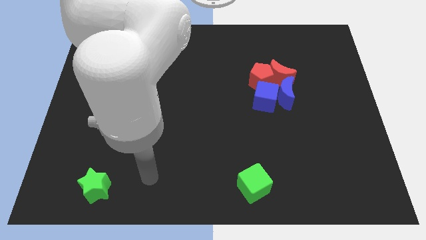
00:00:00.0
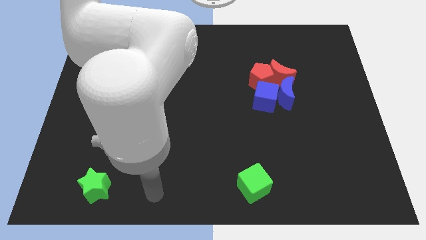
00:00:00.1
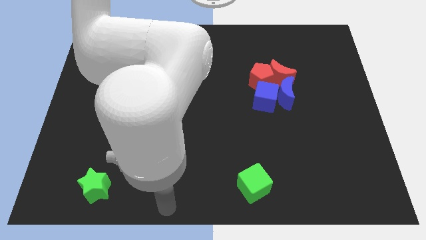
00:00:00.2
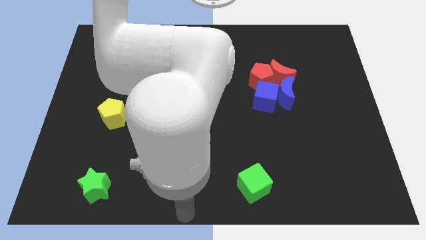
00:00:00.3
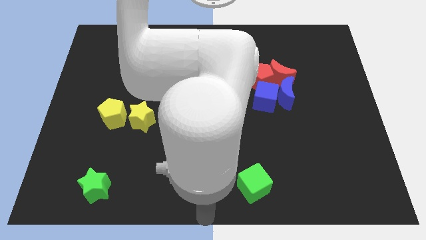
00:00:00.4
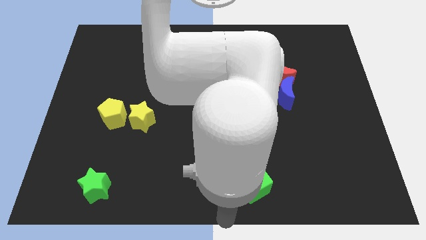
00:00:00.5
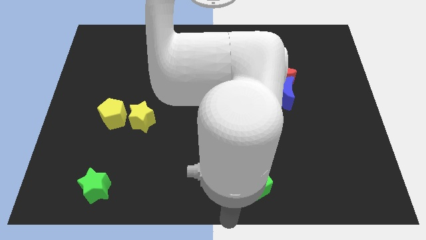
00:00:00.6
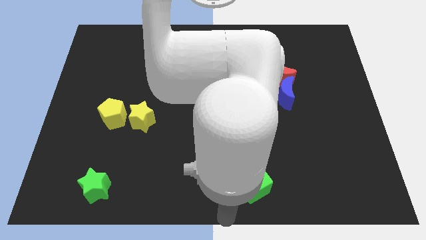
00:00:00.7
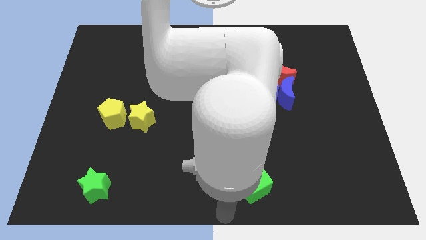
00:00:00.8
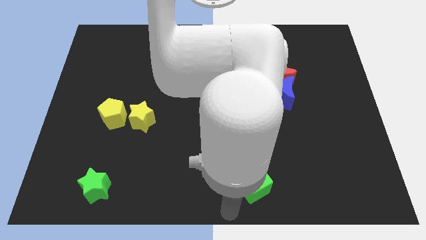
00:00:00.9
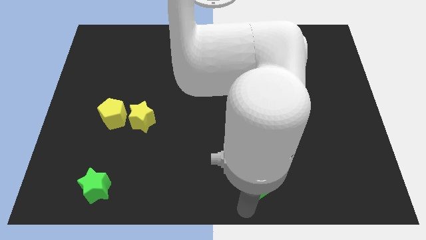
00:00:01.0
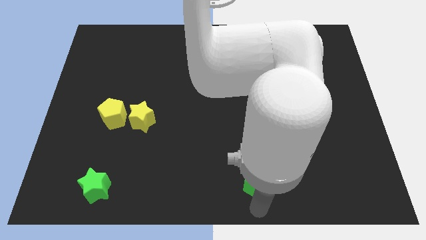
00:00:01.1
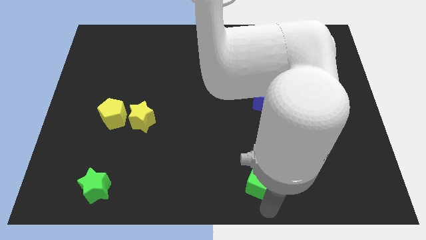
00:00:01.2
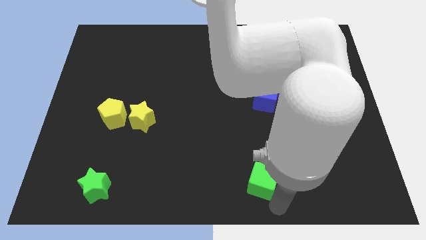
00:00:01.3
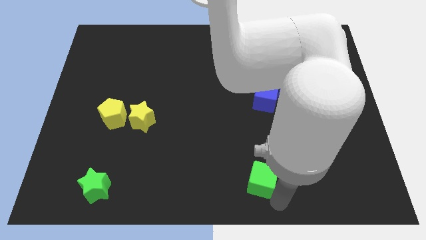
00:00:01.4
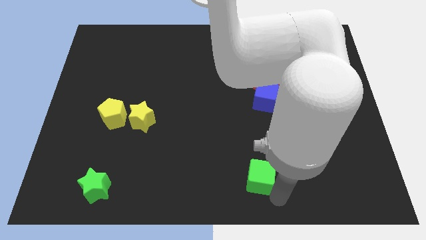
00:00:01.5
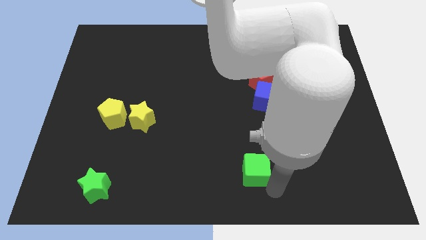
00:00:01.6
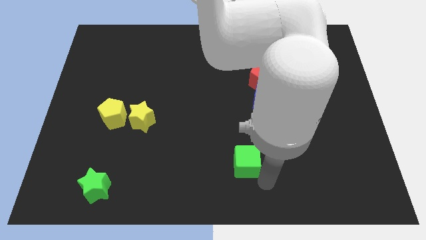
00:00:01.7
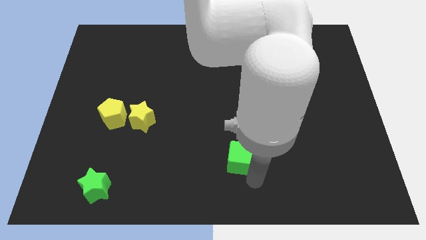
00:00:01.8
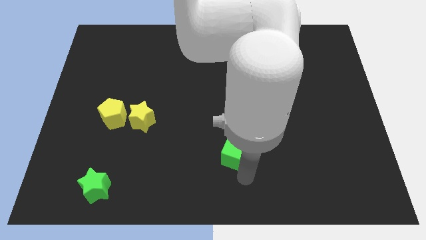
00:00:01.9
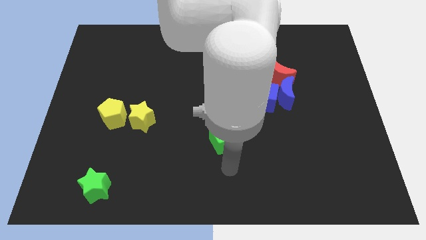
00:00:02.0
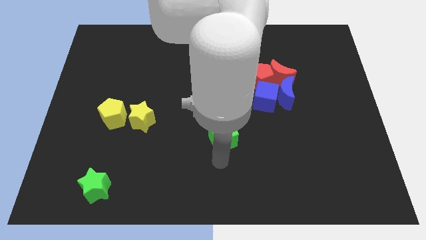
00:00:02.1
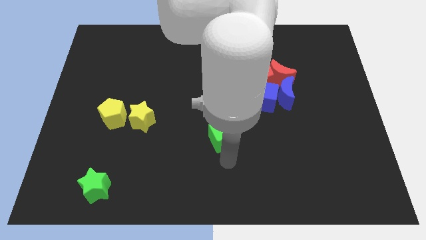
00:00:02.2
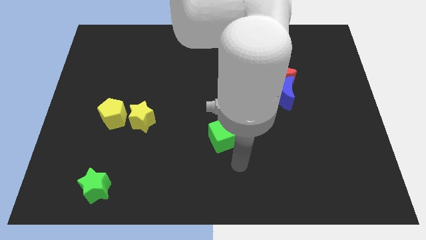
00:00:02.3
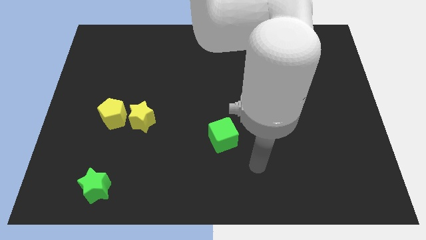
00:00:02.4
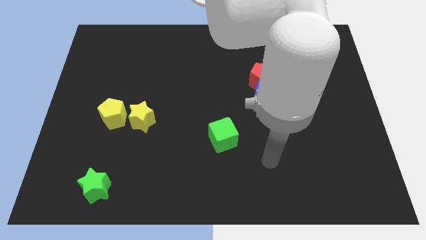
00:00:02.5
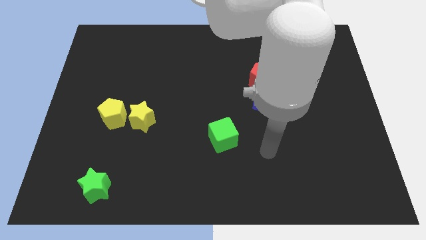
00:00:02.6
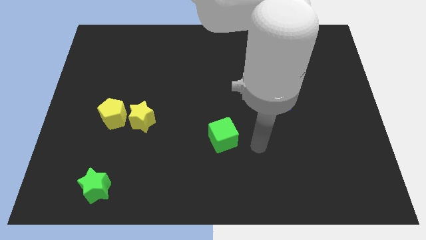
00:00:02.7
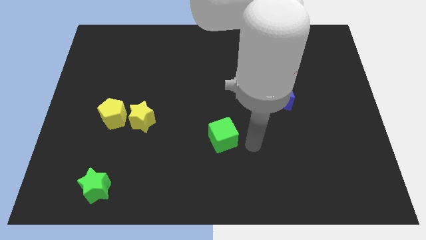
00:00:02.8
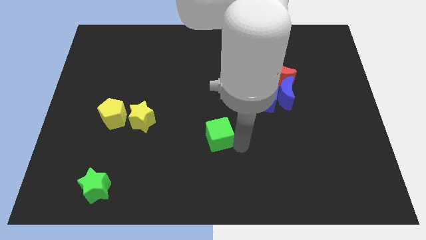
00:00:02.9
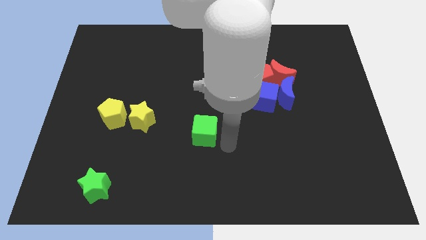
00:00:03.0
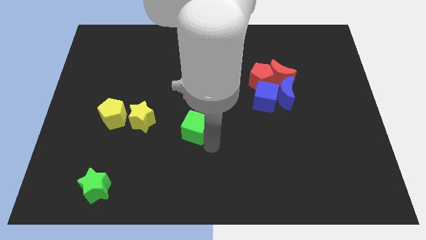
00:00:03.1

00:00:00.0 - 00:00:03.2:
place the green cube right to the yellow star

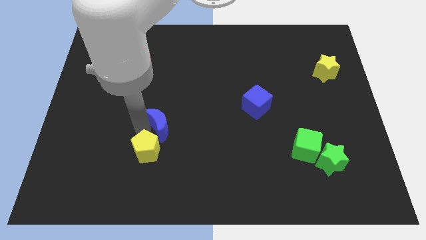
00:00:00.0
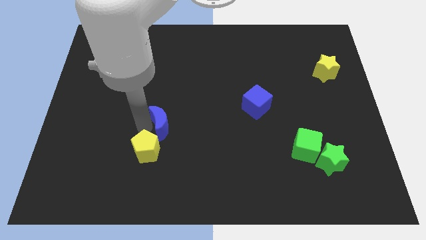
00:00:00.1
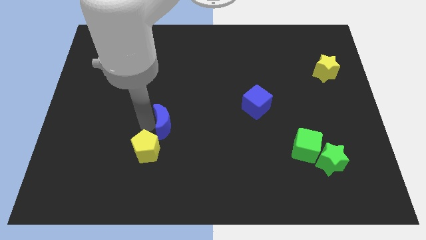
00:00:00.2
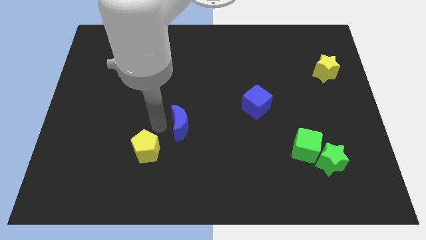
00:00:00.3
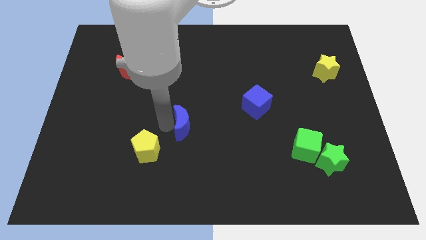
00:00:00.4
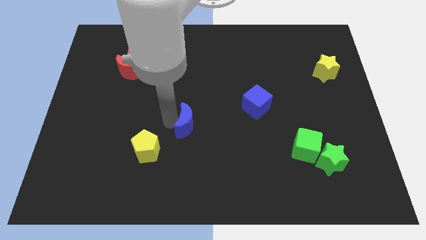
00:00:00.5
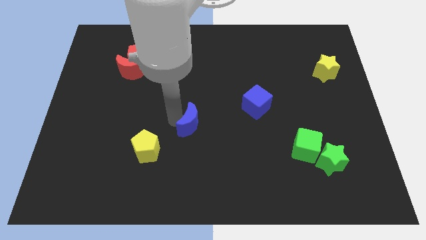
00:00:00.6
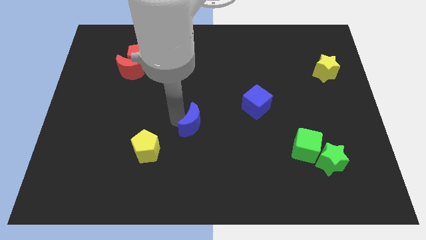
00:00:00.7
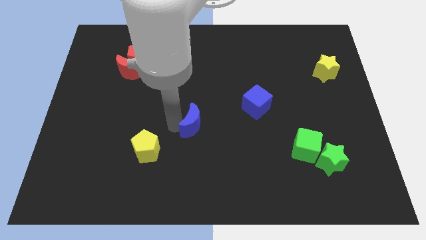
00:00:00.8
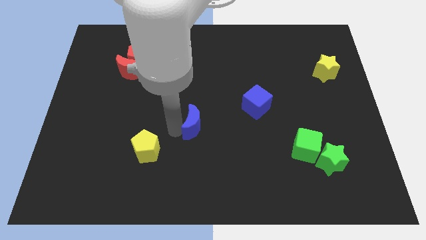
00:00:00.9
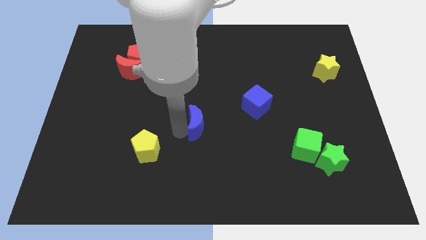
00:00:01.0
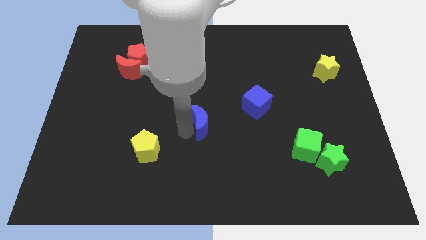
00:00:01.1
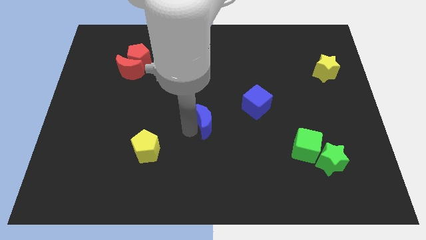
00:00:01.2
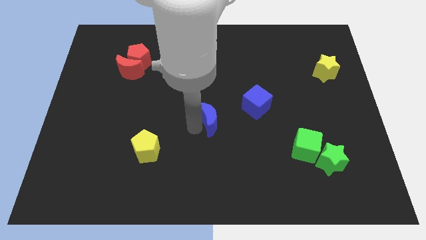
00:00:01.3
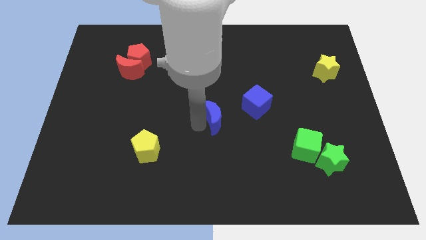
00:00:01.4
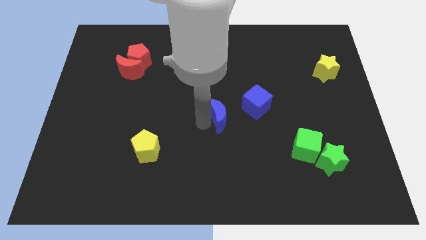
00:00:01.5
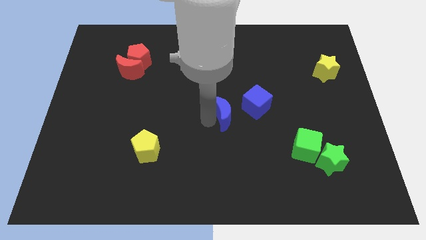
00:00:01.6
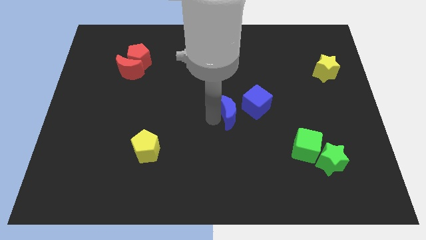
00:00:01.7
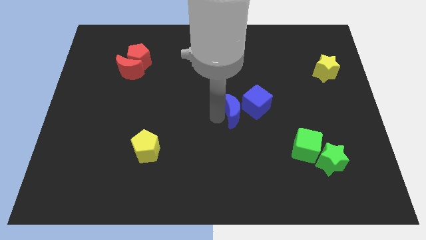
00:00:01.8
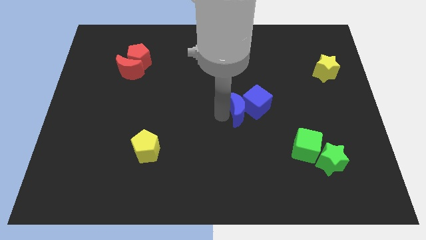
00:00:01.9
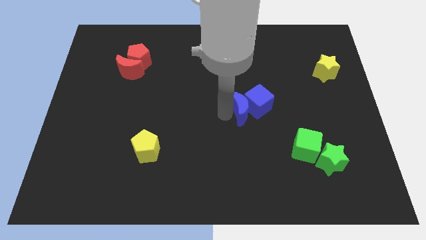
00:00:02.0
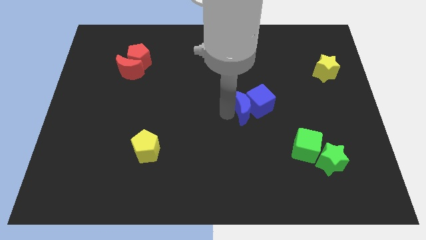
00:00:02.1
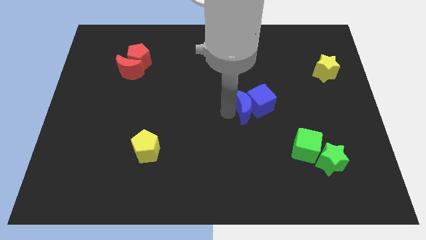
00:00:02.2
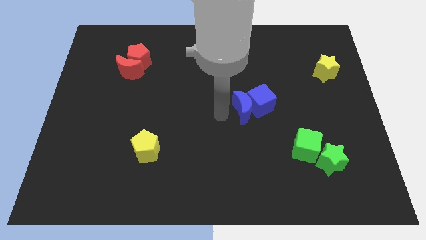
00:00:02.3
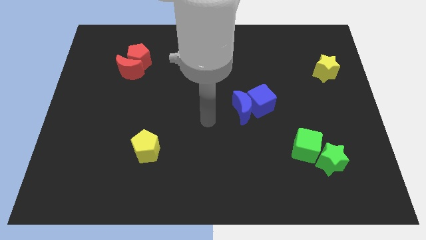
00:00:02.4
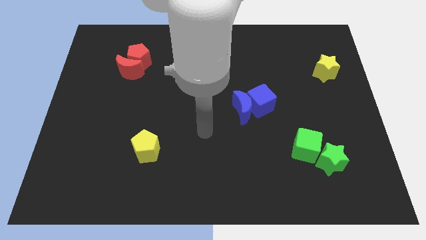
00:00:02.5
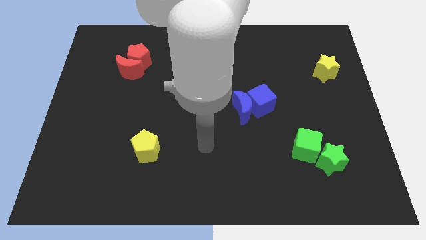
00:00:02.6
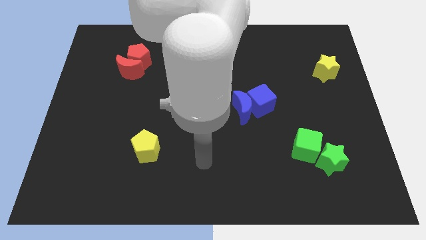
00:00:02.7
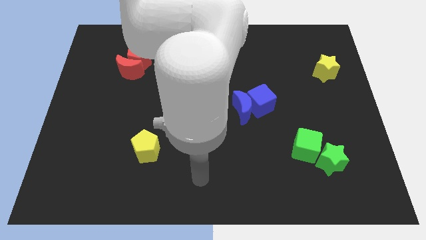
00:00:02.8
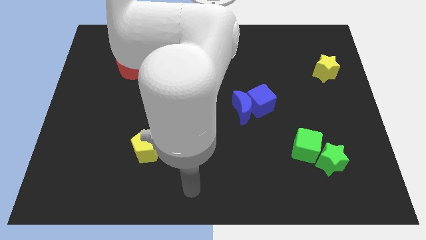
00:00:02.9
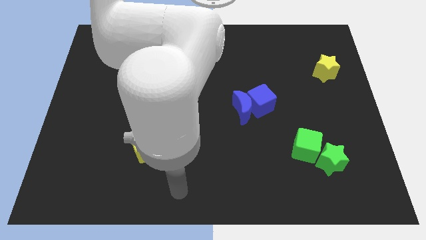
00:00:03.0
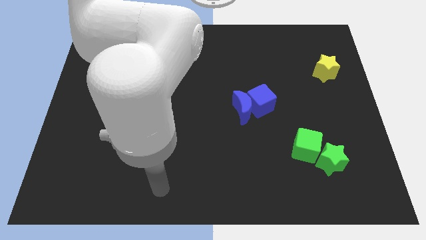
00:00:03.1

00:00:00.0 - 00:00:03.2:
slide blue moon into the blue cube

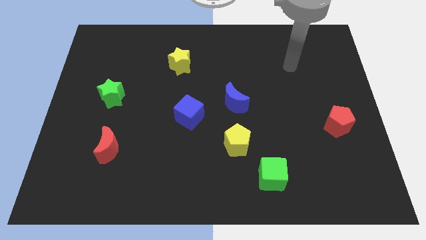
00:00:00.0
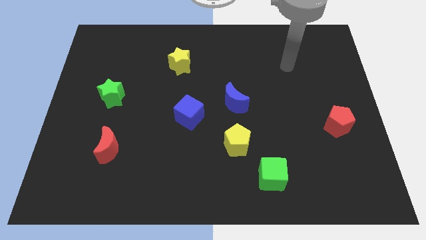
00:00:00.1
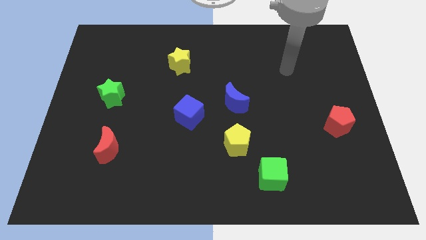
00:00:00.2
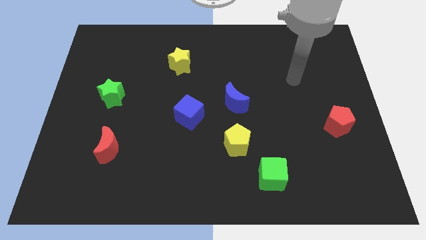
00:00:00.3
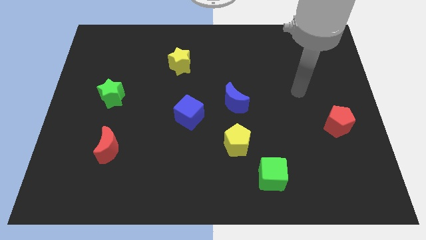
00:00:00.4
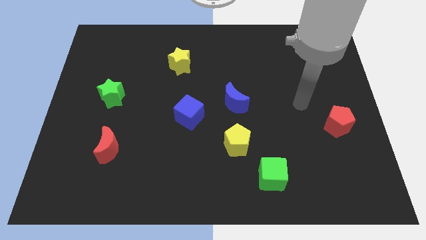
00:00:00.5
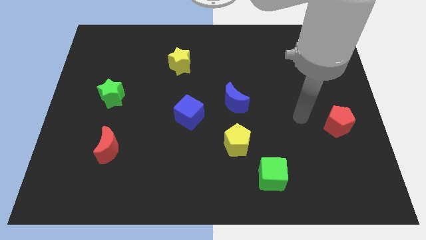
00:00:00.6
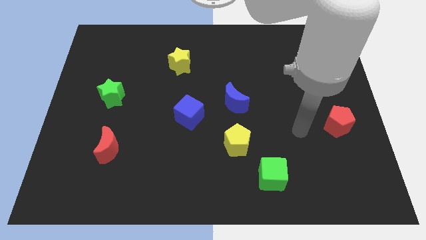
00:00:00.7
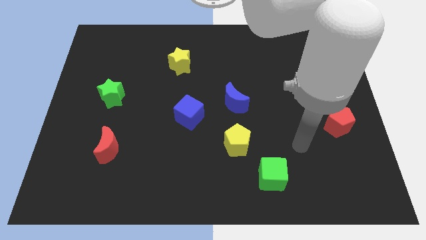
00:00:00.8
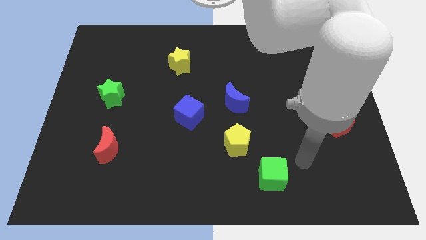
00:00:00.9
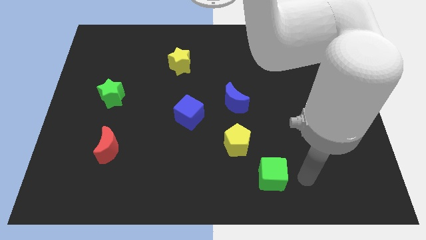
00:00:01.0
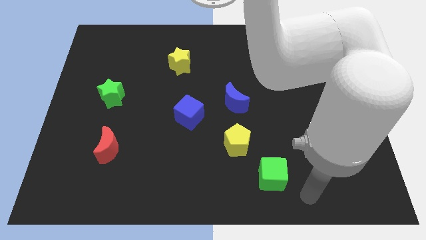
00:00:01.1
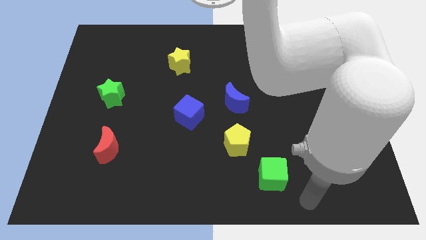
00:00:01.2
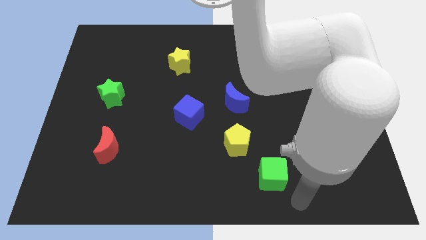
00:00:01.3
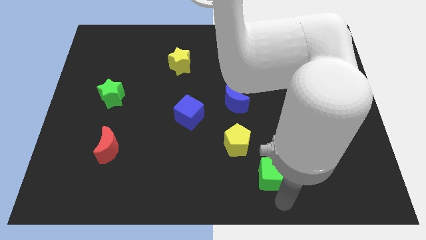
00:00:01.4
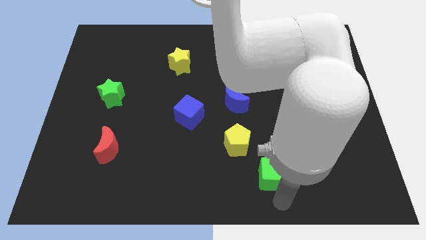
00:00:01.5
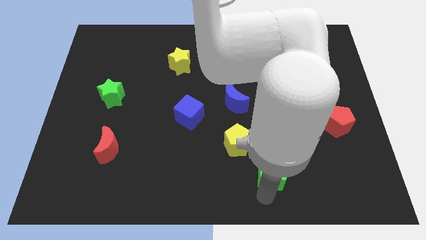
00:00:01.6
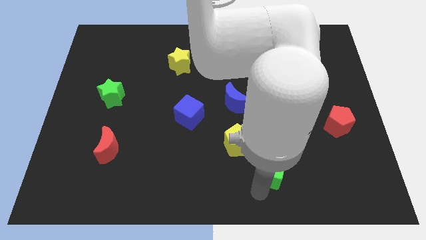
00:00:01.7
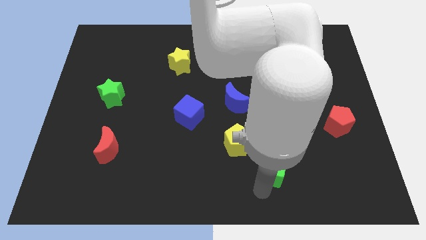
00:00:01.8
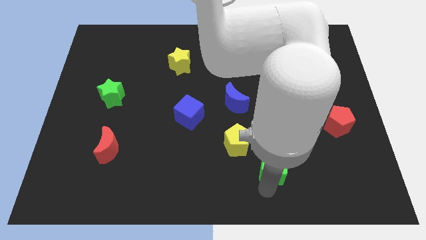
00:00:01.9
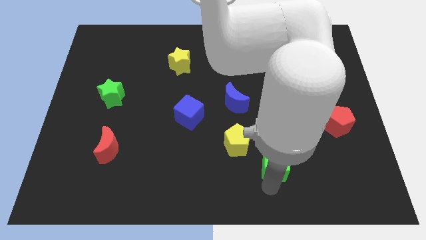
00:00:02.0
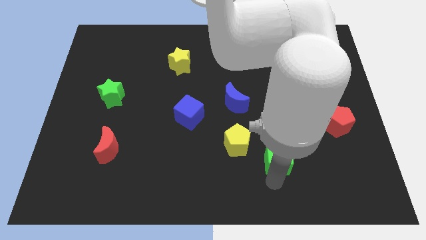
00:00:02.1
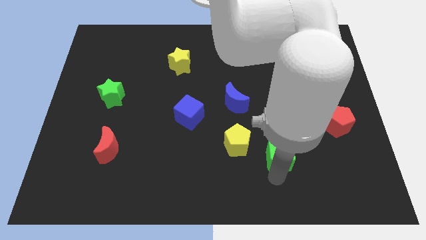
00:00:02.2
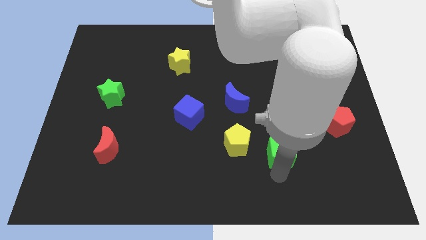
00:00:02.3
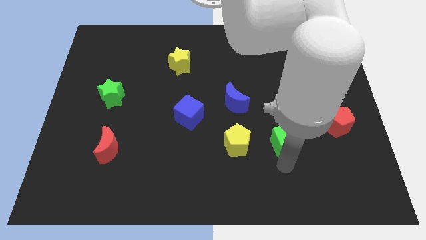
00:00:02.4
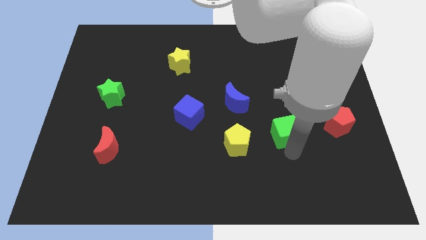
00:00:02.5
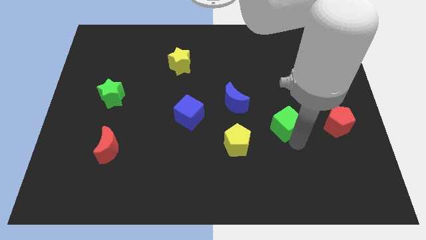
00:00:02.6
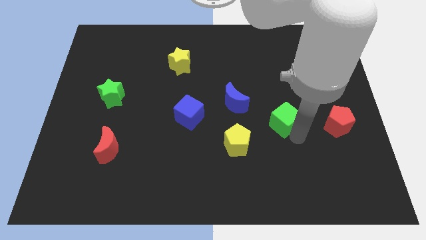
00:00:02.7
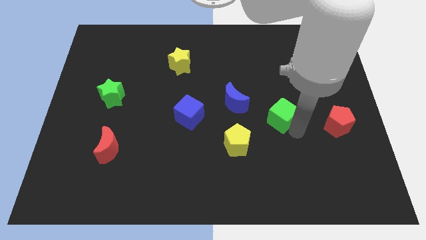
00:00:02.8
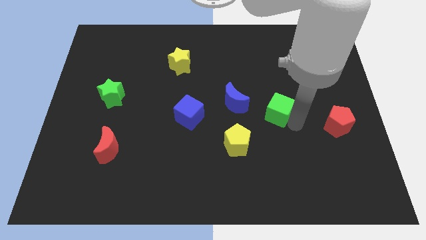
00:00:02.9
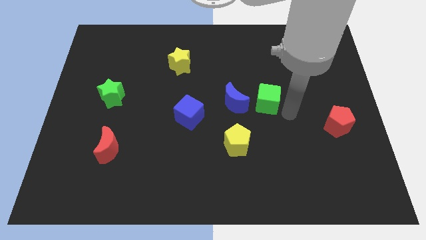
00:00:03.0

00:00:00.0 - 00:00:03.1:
move the green cube diagonally top right to the yellow pentagon
